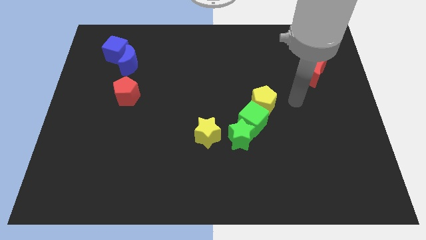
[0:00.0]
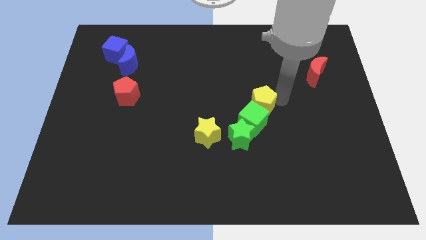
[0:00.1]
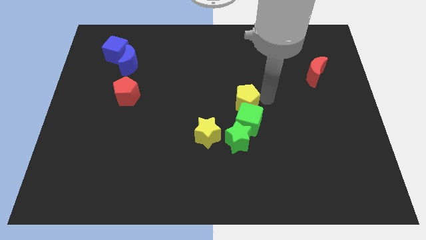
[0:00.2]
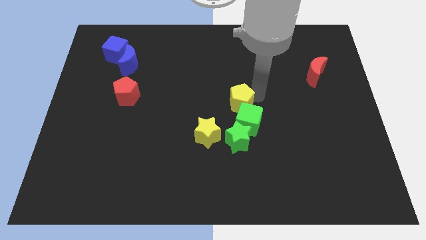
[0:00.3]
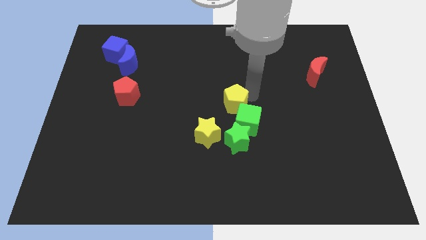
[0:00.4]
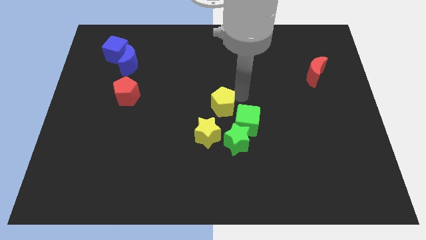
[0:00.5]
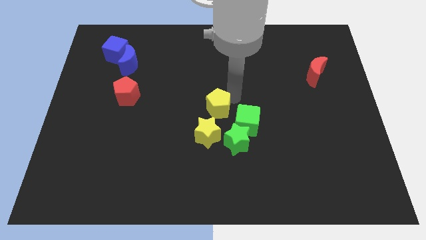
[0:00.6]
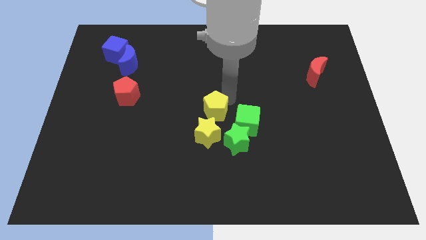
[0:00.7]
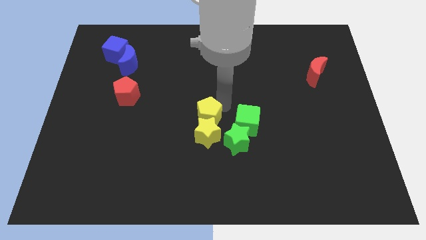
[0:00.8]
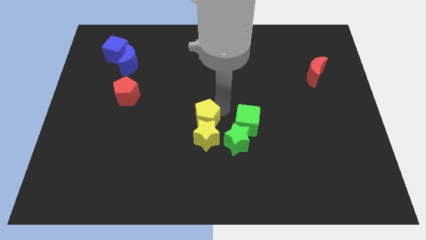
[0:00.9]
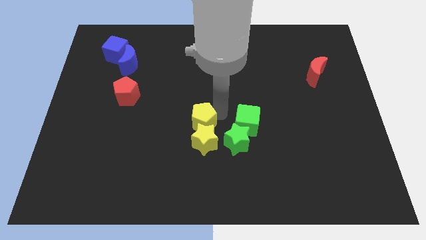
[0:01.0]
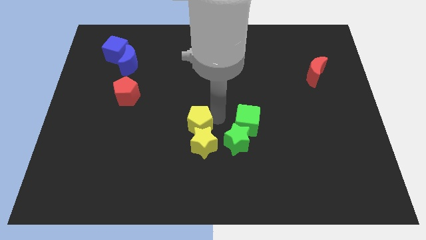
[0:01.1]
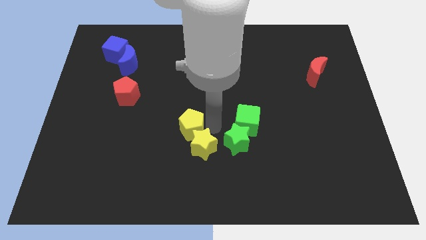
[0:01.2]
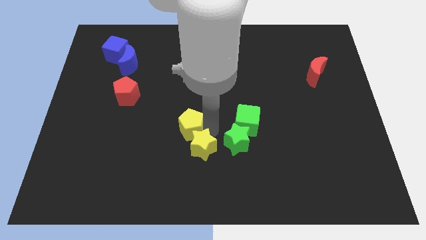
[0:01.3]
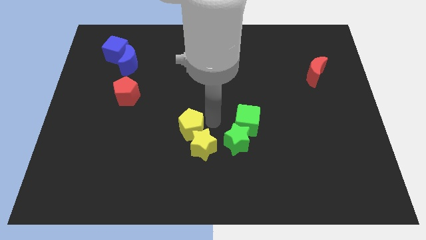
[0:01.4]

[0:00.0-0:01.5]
push the yellow pentagon into the yellow star

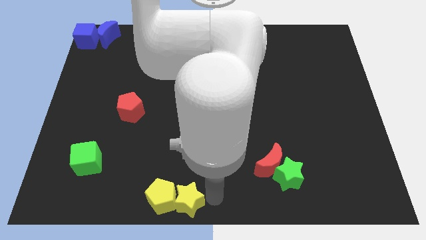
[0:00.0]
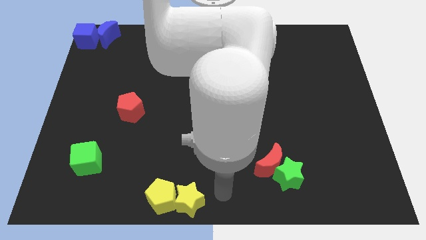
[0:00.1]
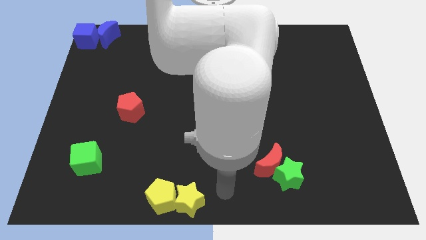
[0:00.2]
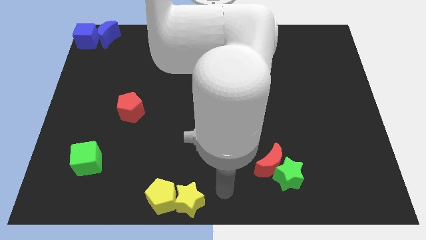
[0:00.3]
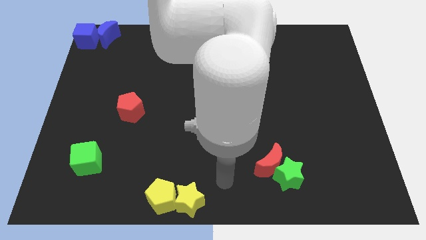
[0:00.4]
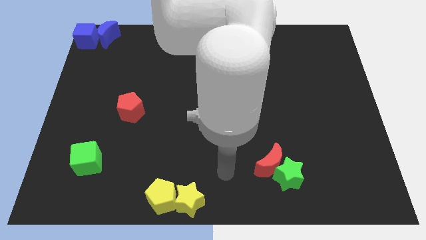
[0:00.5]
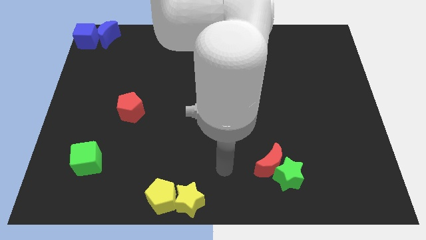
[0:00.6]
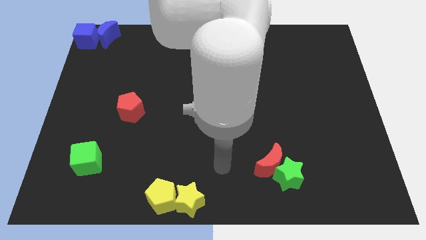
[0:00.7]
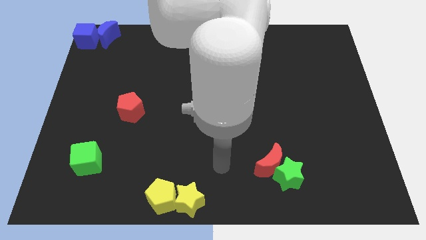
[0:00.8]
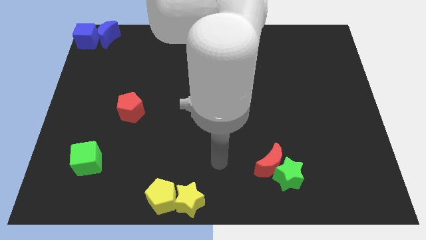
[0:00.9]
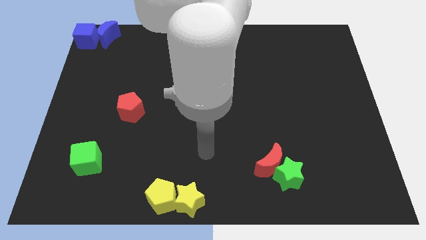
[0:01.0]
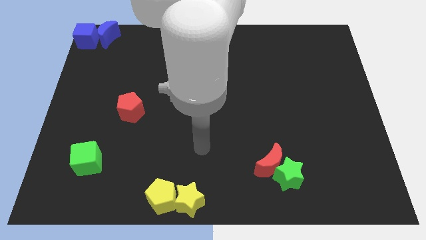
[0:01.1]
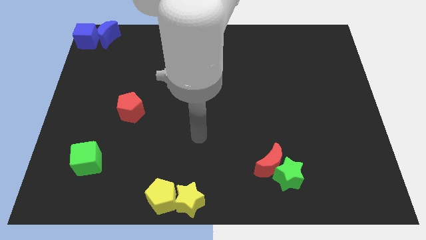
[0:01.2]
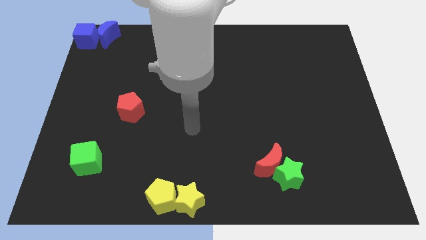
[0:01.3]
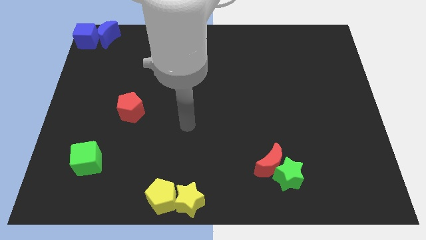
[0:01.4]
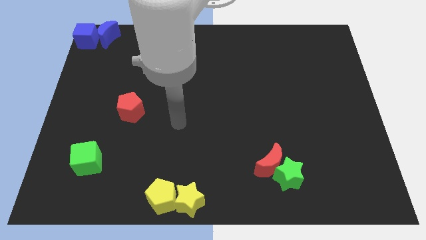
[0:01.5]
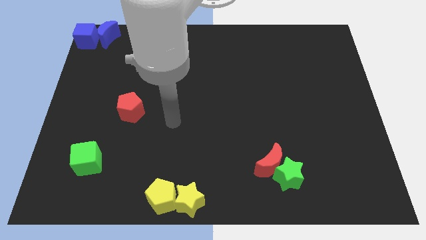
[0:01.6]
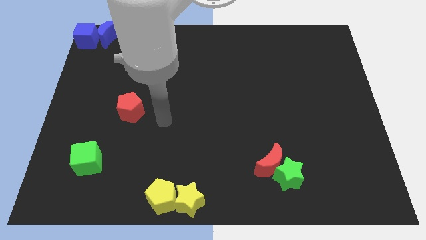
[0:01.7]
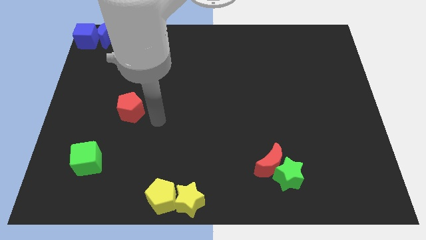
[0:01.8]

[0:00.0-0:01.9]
move yourself away from the yellow star

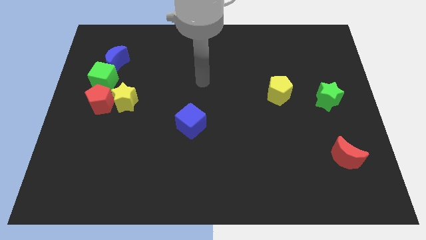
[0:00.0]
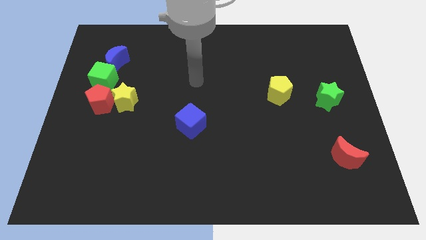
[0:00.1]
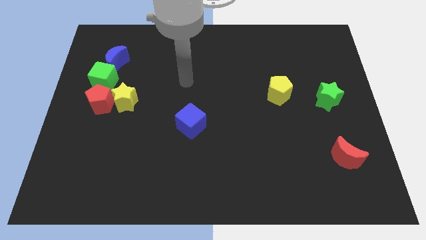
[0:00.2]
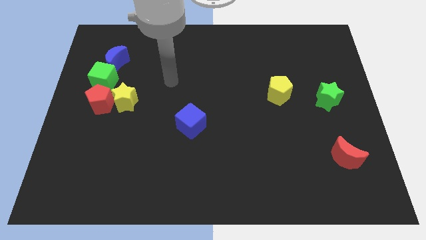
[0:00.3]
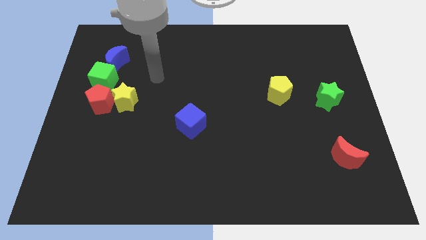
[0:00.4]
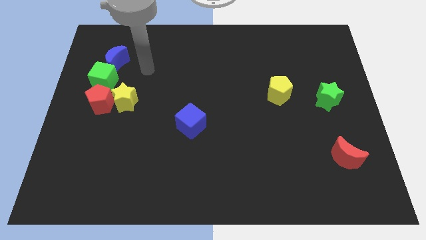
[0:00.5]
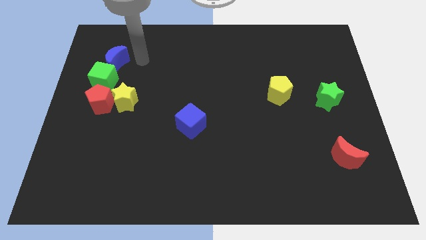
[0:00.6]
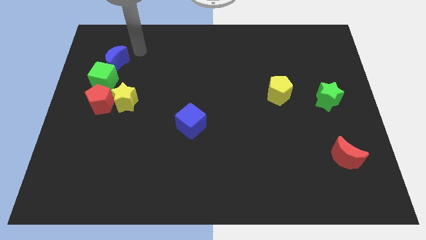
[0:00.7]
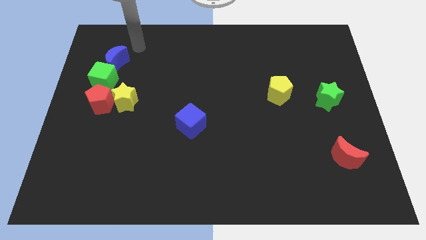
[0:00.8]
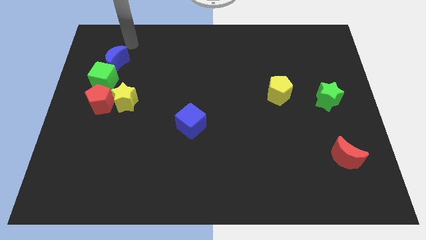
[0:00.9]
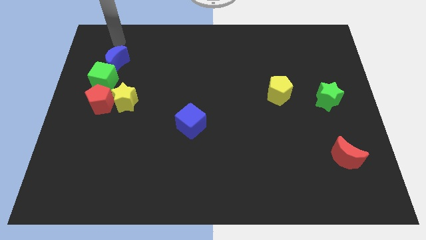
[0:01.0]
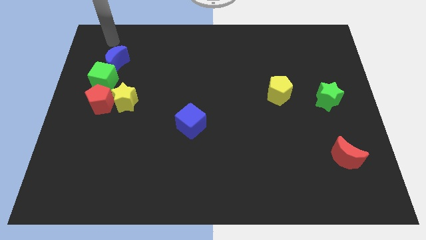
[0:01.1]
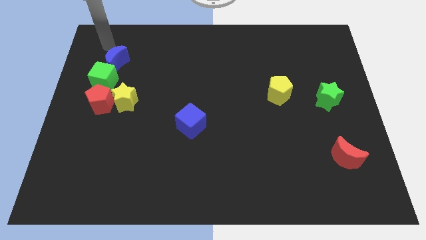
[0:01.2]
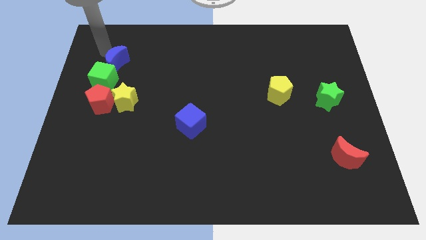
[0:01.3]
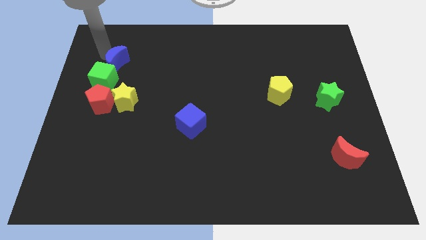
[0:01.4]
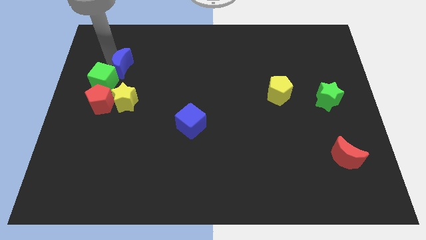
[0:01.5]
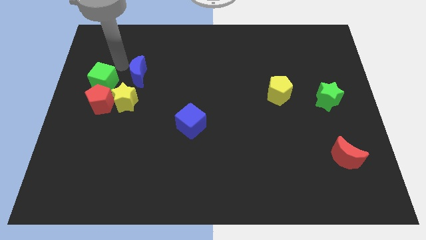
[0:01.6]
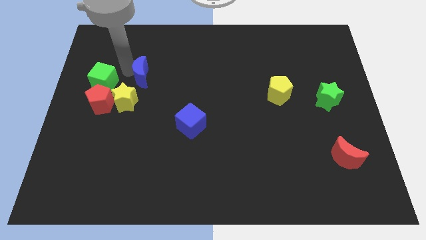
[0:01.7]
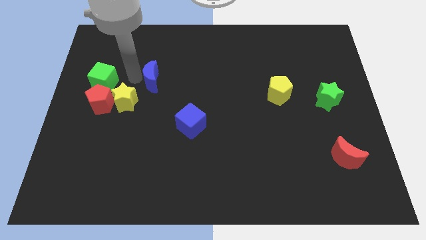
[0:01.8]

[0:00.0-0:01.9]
separate the blue crescent from the green cube

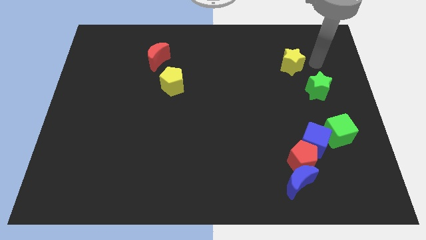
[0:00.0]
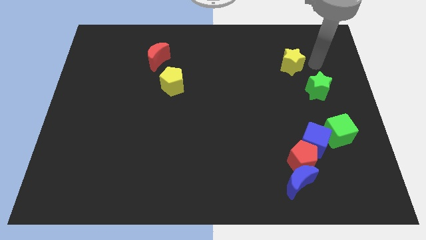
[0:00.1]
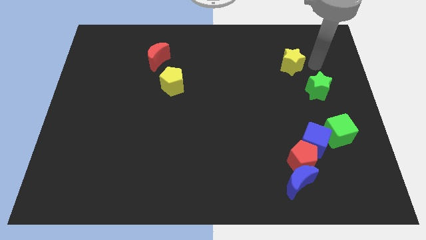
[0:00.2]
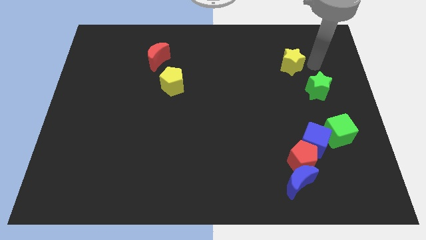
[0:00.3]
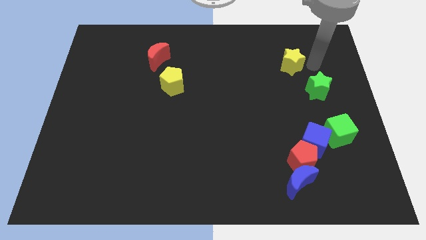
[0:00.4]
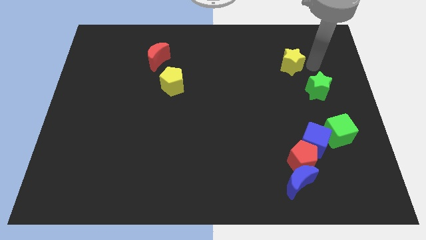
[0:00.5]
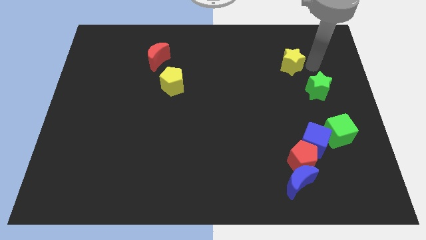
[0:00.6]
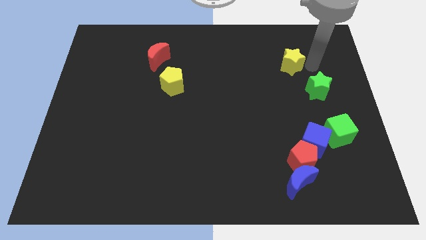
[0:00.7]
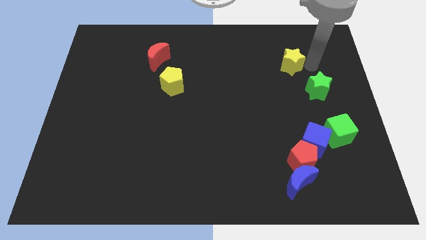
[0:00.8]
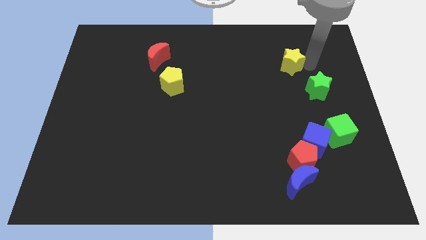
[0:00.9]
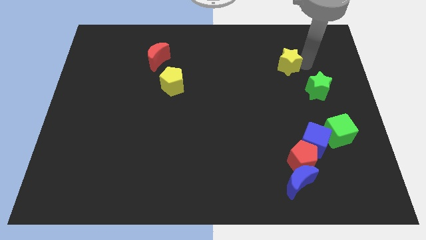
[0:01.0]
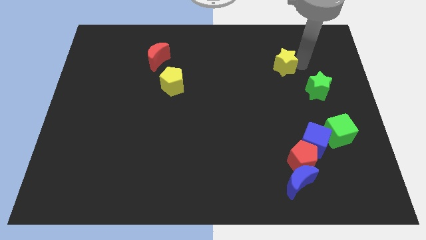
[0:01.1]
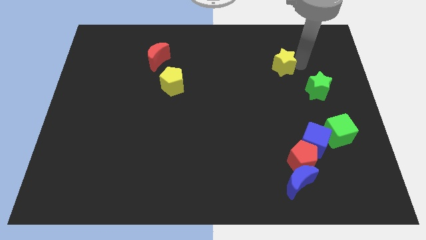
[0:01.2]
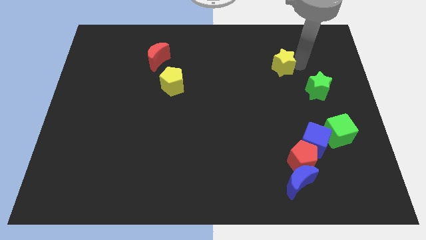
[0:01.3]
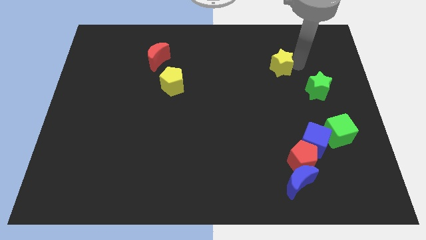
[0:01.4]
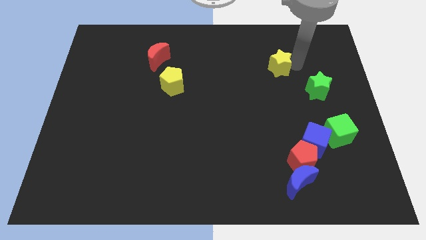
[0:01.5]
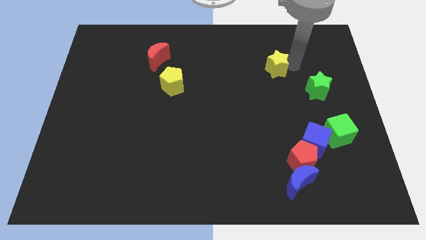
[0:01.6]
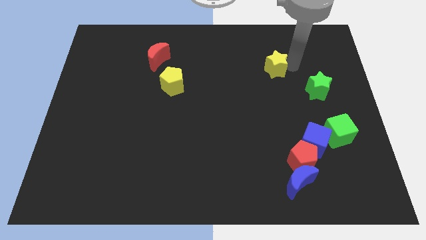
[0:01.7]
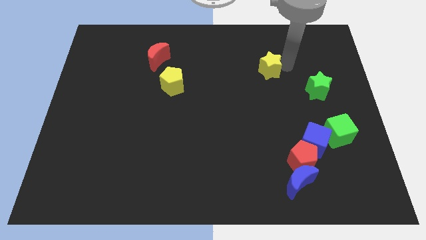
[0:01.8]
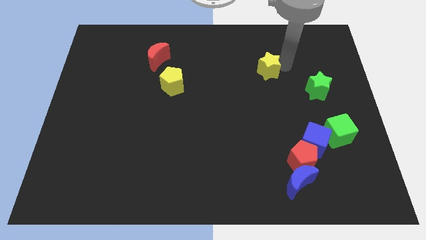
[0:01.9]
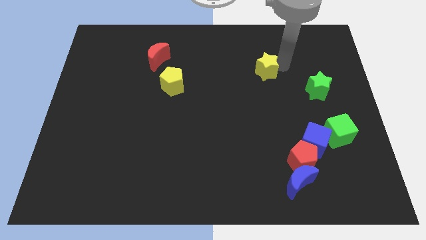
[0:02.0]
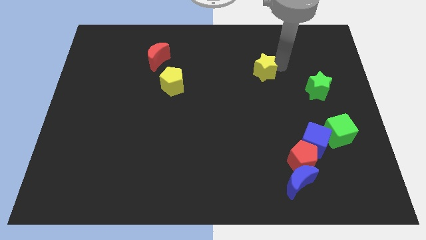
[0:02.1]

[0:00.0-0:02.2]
push the yellow star towards the center of the board

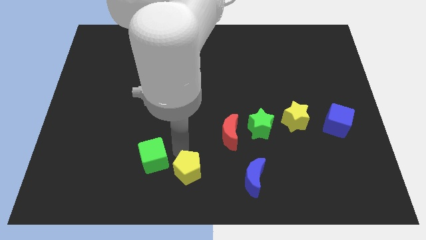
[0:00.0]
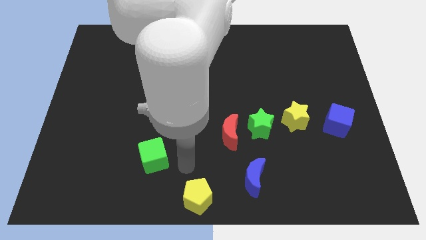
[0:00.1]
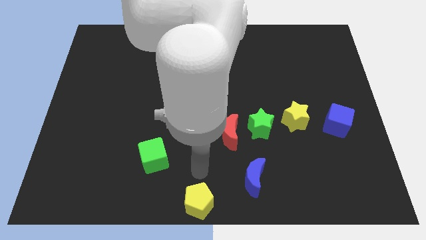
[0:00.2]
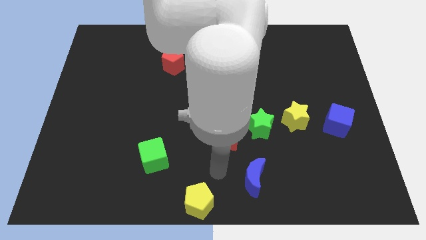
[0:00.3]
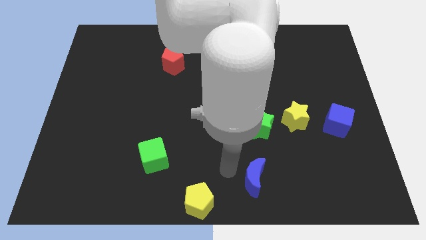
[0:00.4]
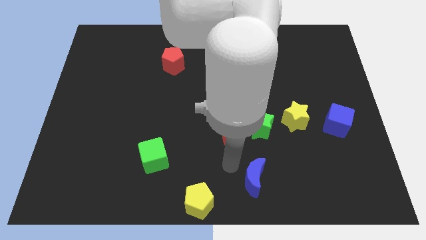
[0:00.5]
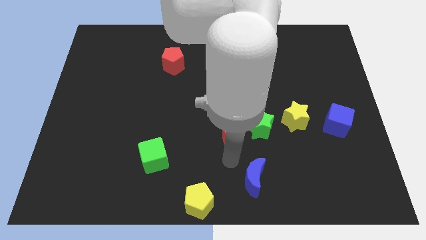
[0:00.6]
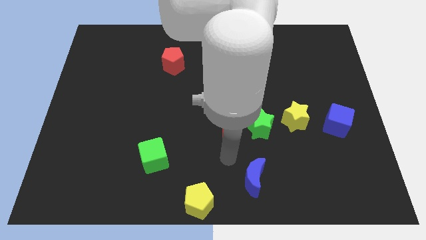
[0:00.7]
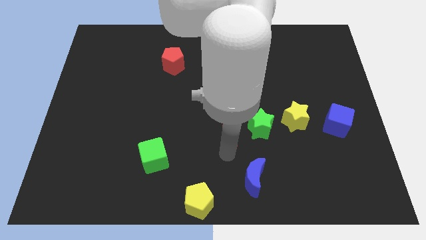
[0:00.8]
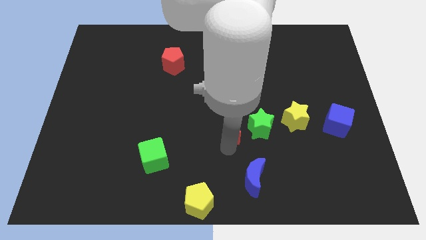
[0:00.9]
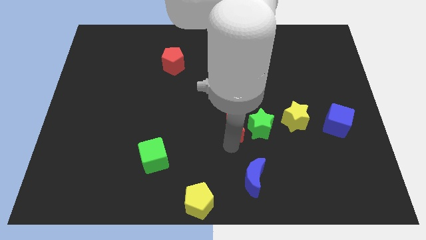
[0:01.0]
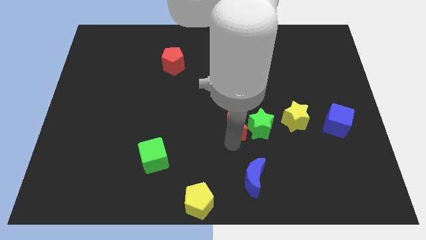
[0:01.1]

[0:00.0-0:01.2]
place the yellow pentagon at the bottom center of the board

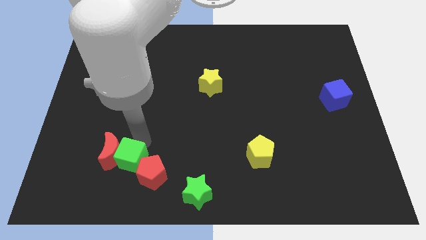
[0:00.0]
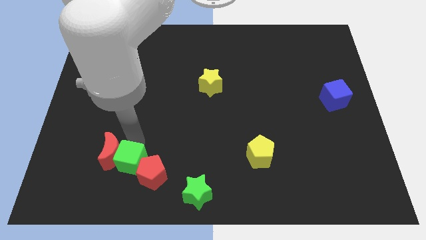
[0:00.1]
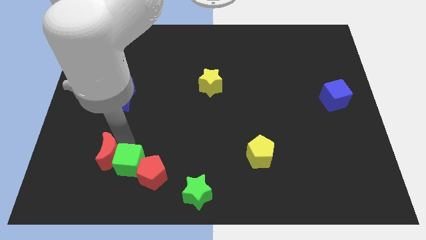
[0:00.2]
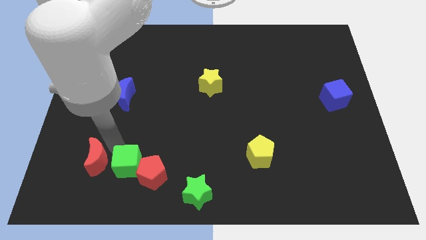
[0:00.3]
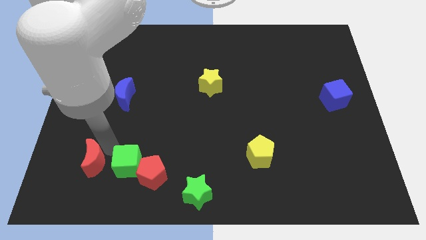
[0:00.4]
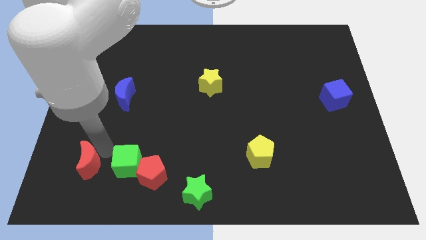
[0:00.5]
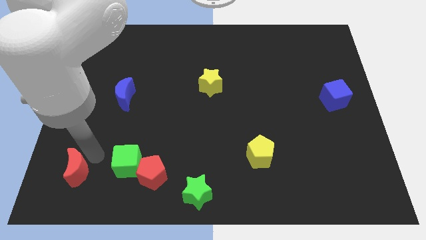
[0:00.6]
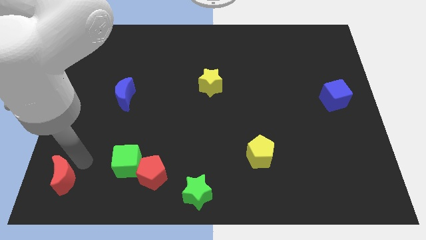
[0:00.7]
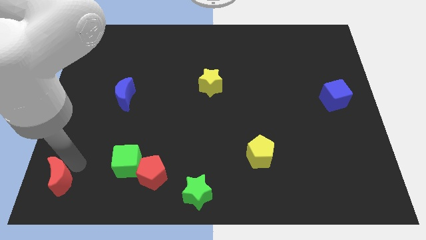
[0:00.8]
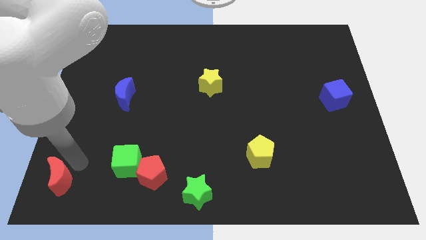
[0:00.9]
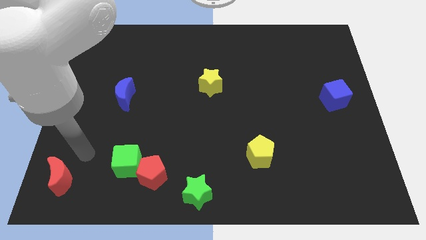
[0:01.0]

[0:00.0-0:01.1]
separate red moon from green cube